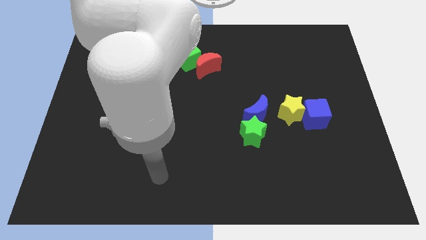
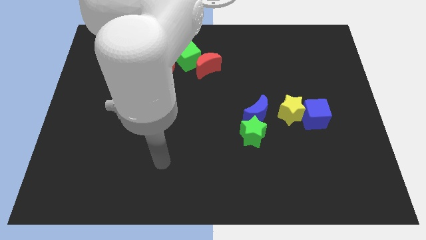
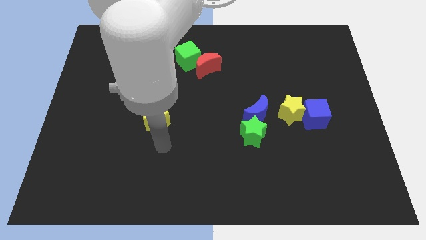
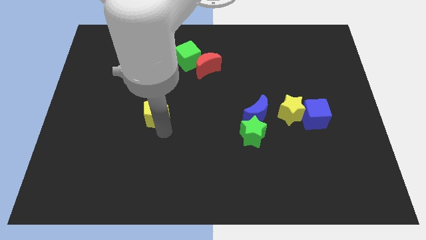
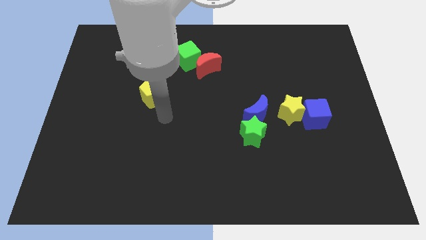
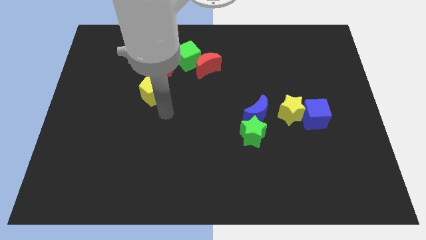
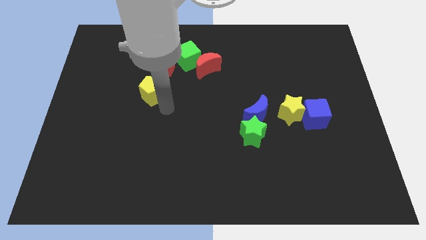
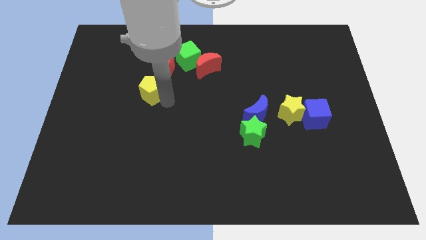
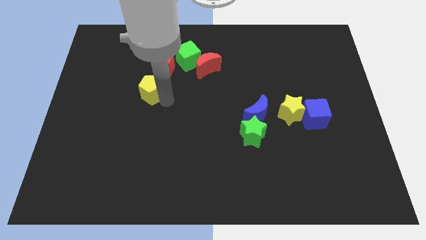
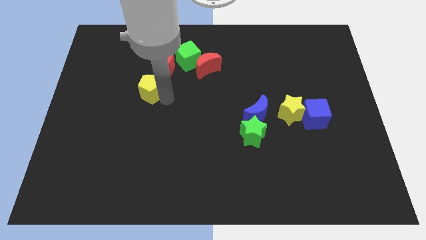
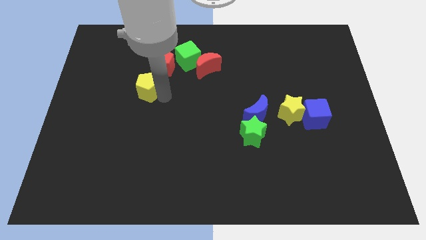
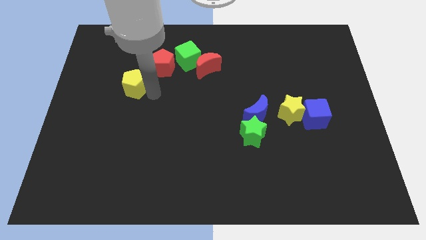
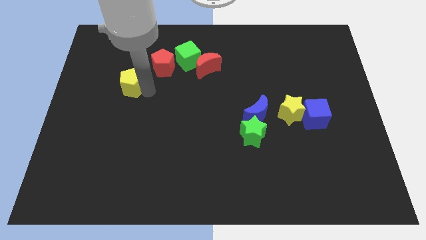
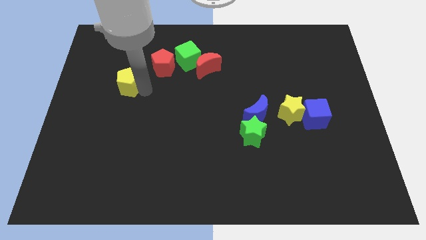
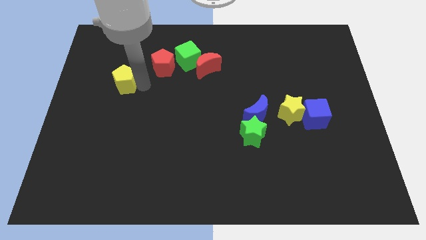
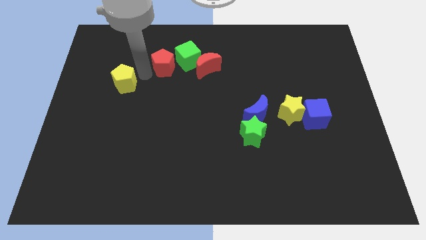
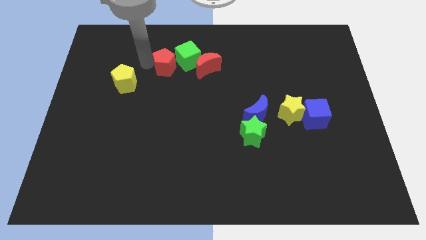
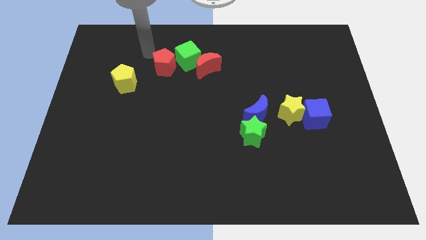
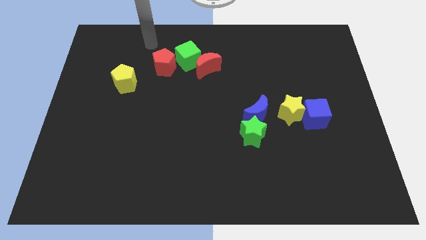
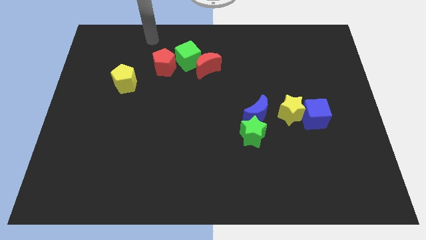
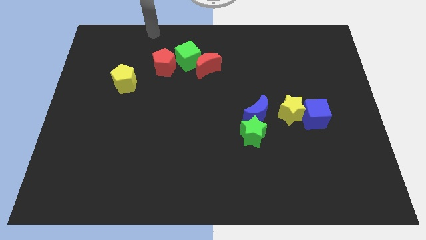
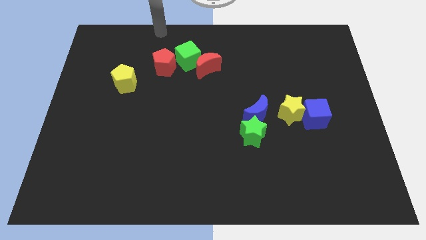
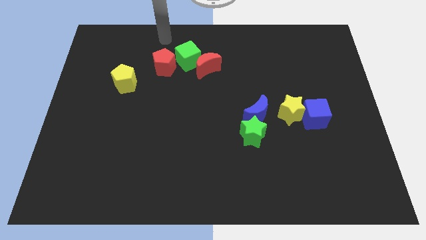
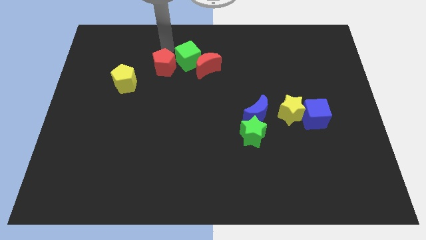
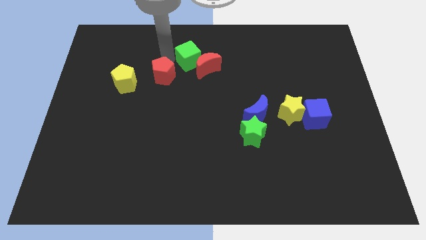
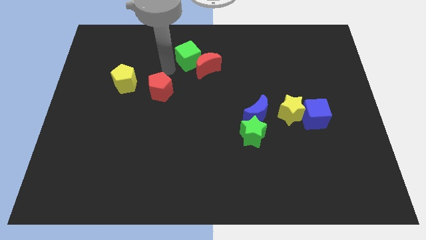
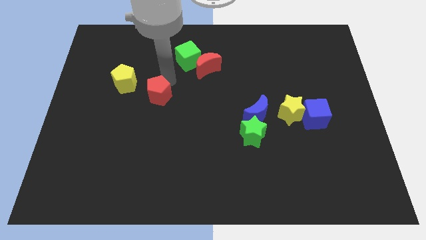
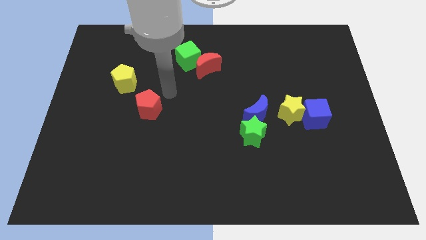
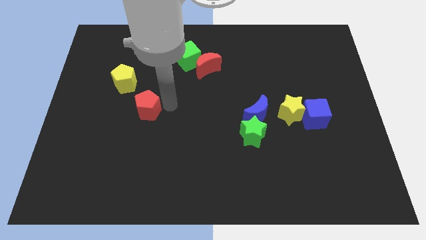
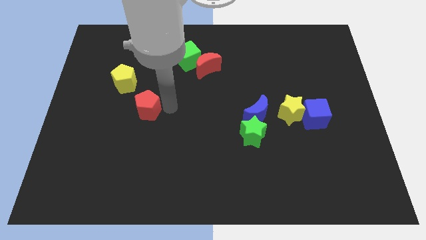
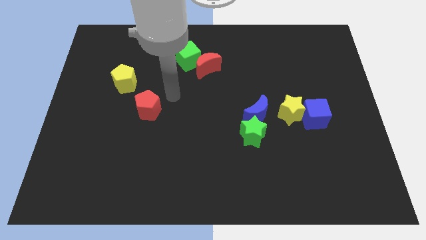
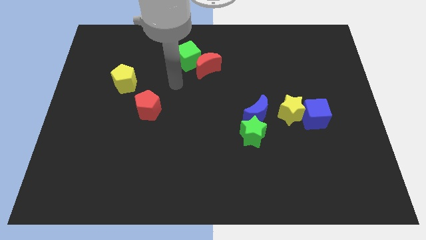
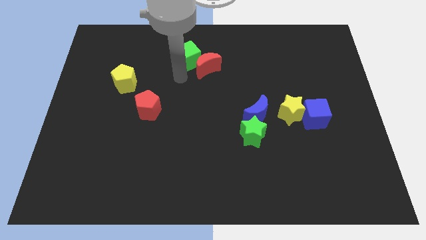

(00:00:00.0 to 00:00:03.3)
place pentagons in a diagonal line

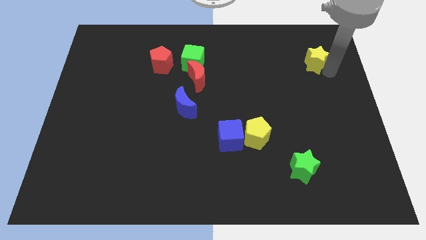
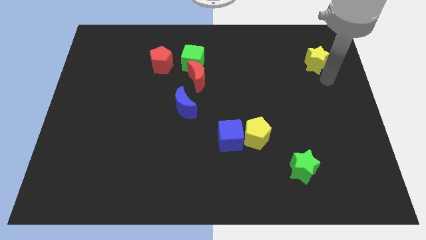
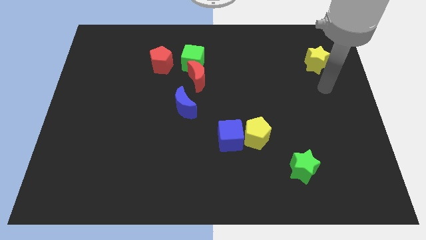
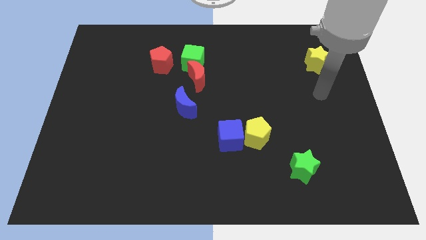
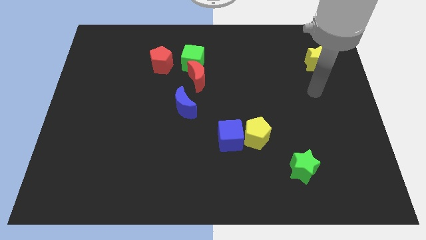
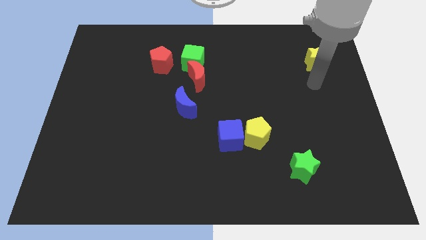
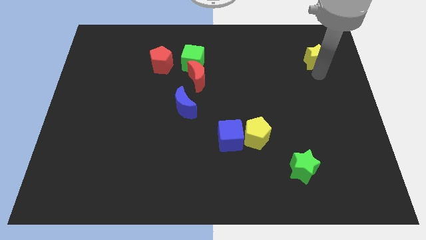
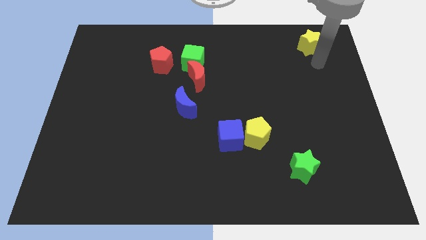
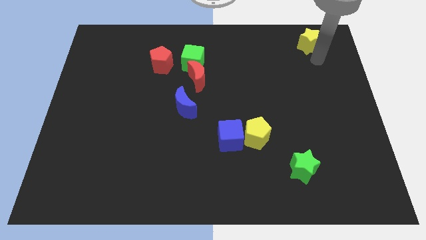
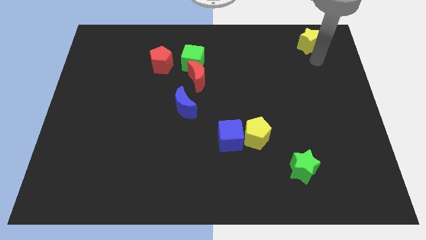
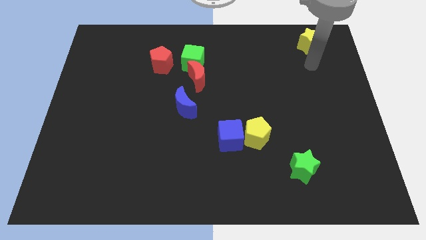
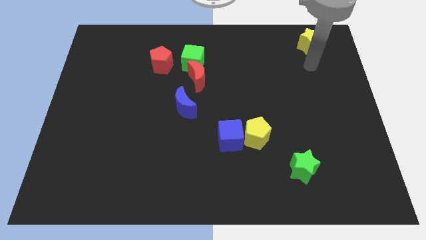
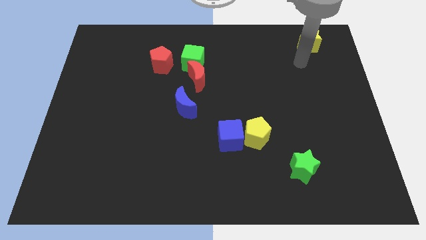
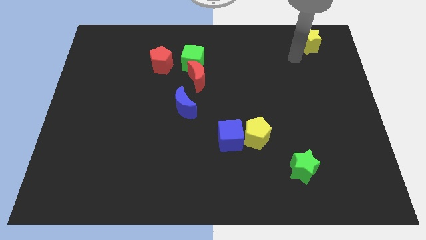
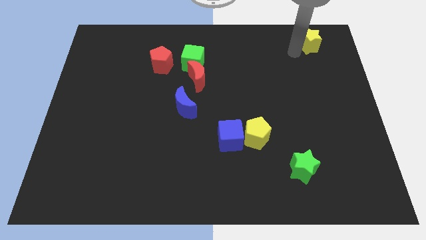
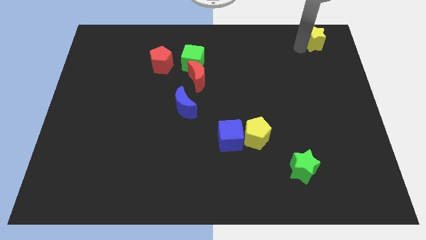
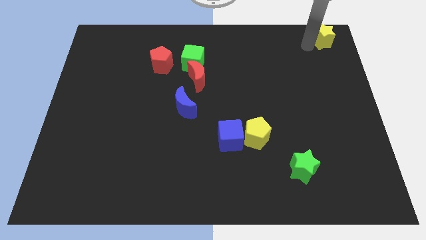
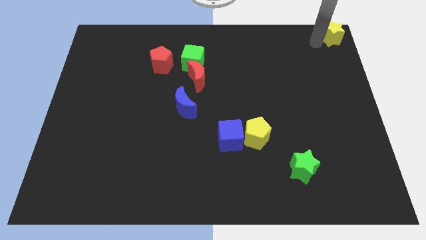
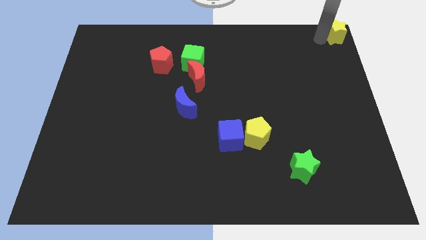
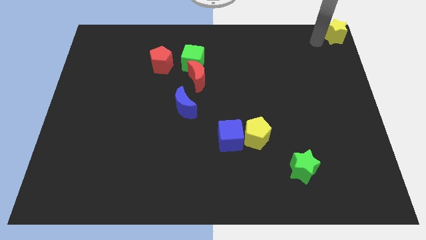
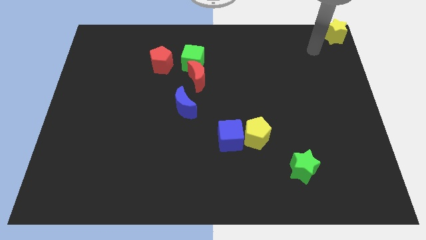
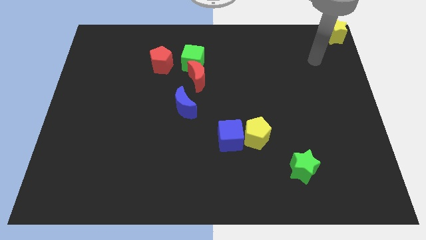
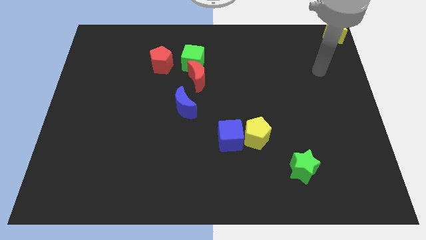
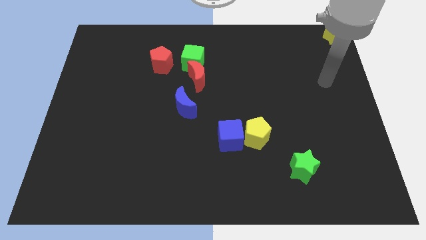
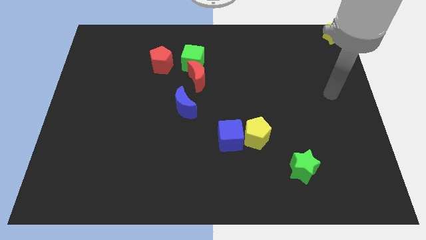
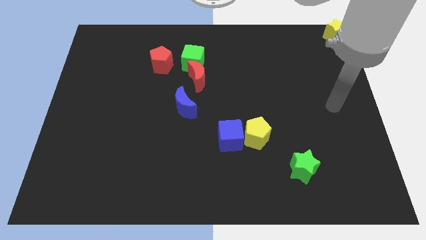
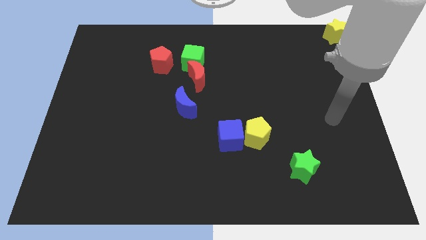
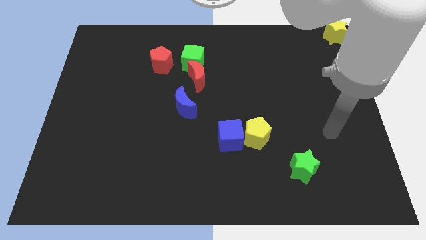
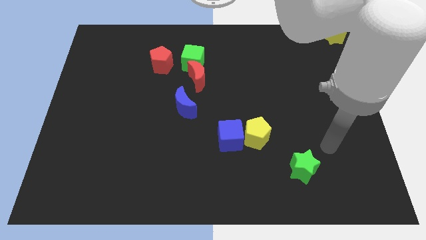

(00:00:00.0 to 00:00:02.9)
slightly push the yellow star to top tright corner

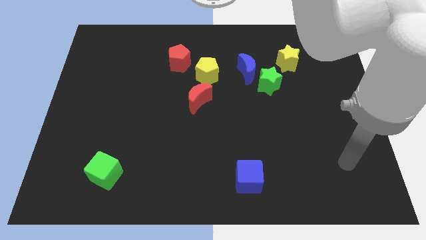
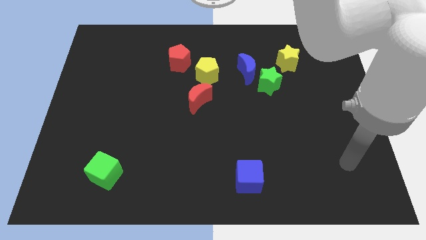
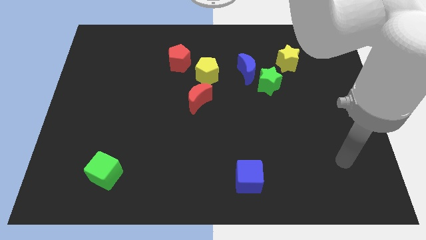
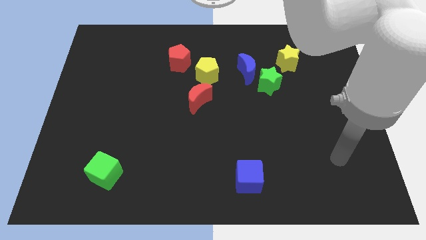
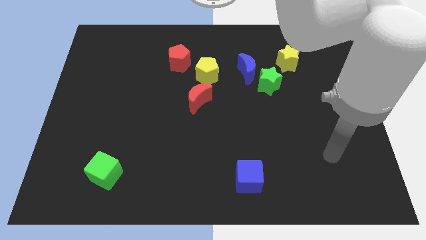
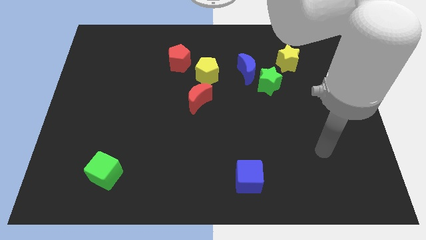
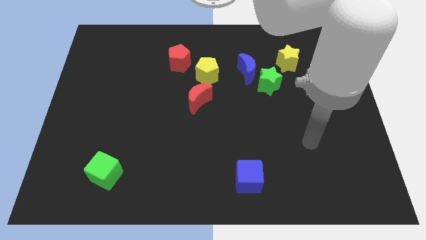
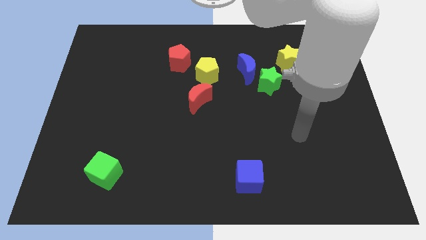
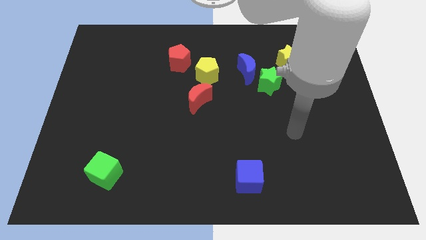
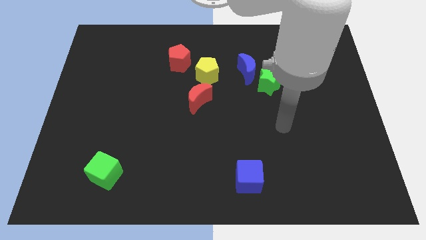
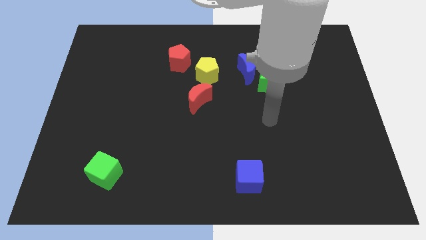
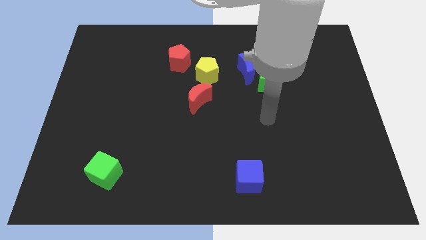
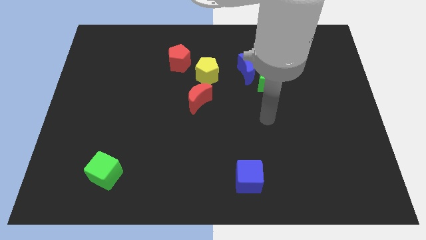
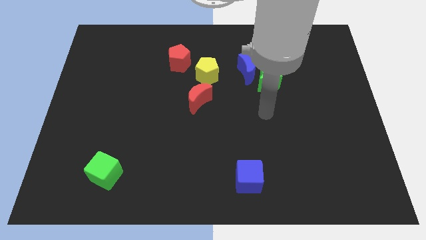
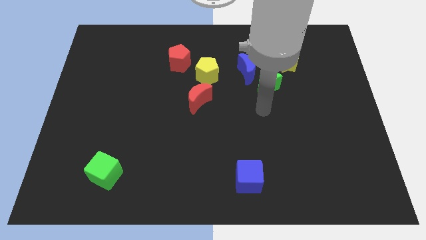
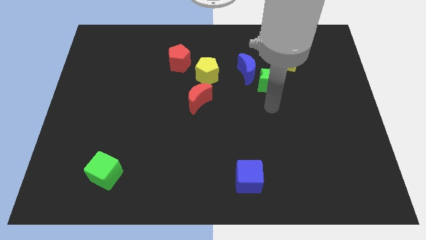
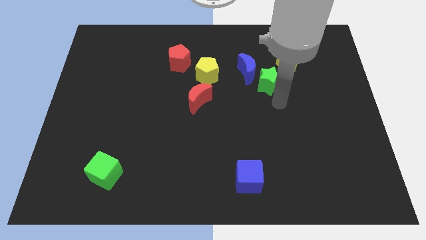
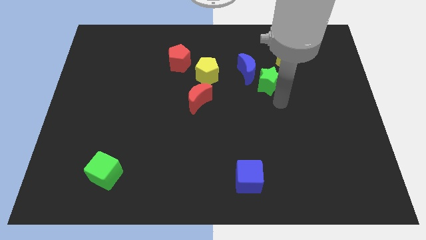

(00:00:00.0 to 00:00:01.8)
place the arm down to the green star

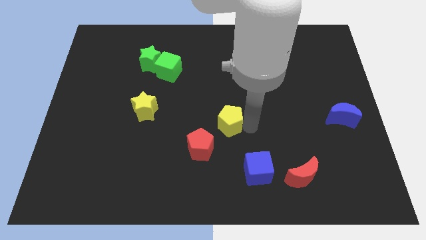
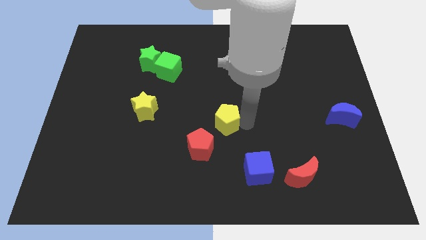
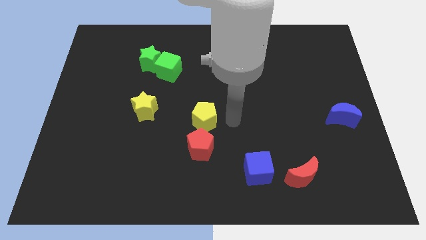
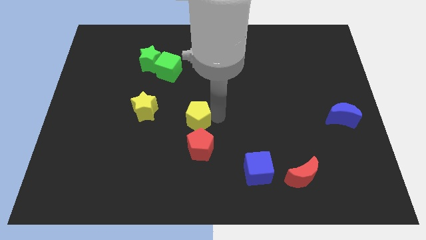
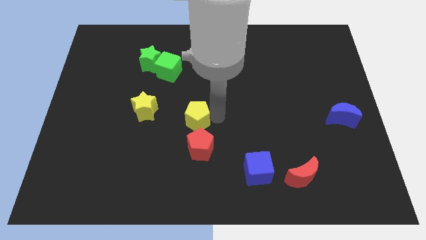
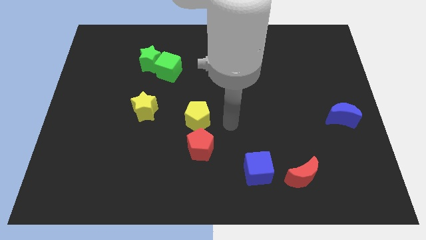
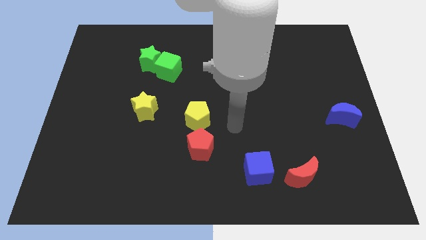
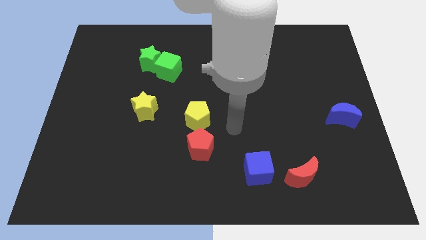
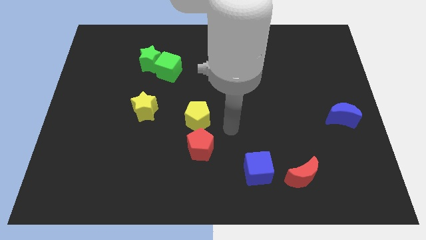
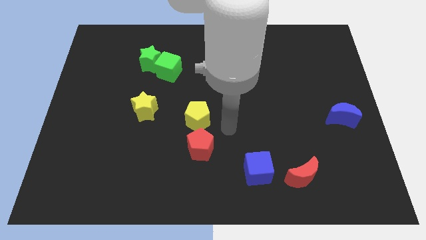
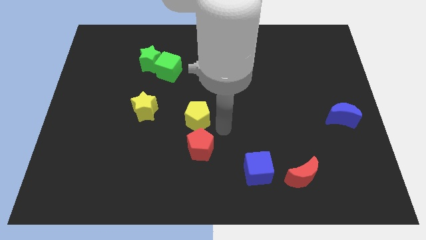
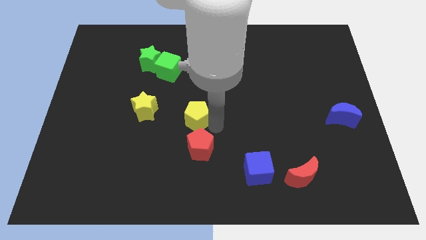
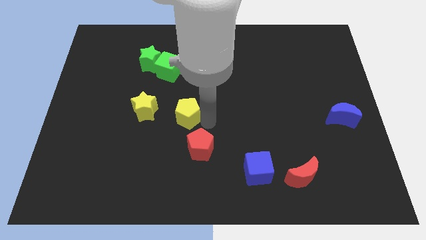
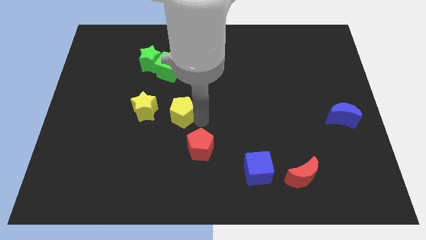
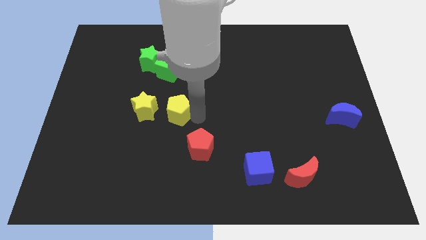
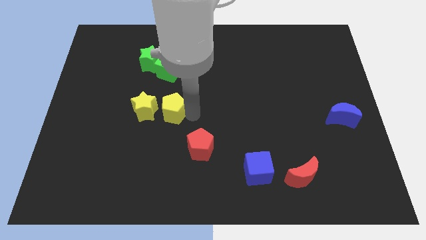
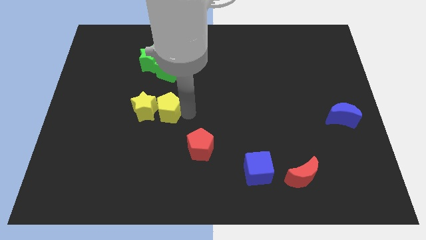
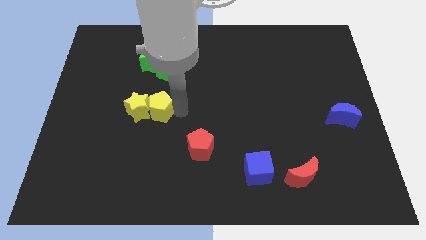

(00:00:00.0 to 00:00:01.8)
drag the yellow pentagon close to yellow star
